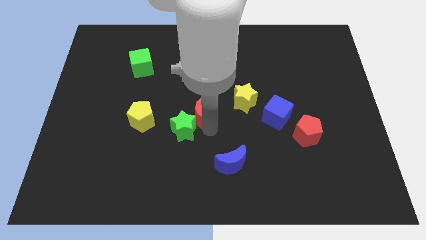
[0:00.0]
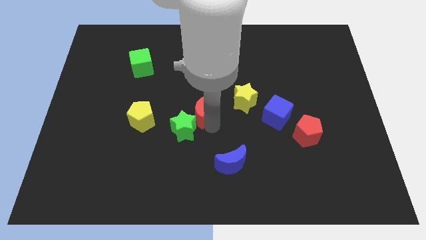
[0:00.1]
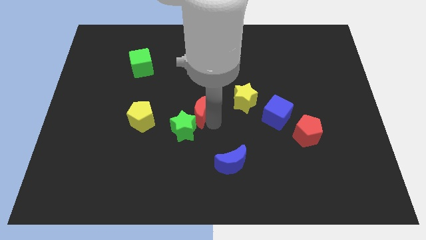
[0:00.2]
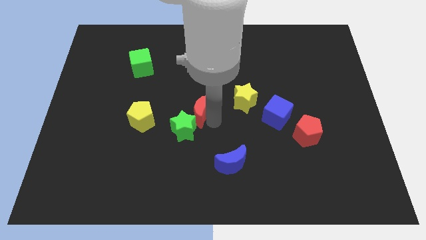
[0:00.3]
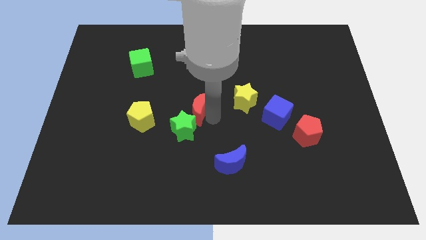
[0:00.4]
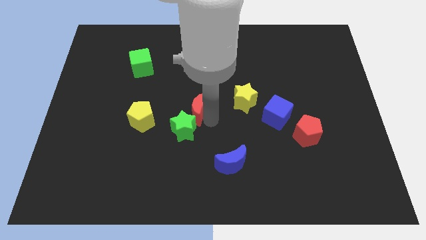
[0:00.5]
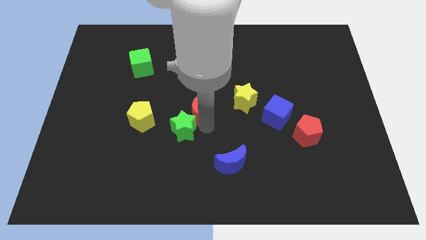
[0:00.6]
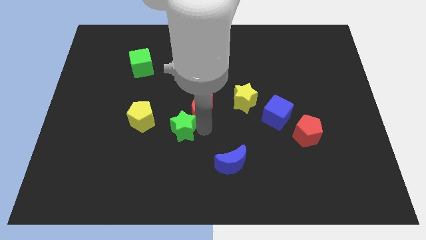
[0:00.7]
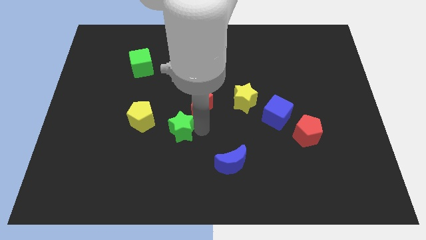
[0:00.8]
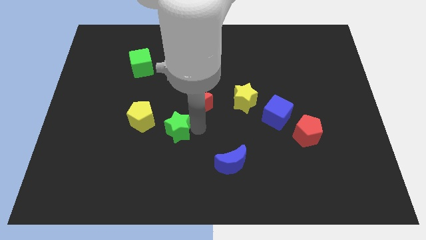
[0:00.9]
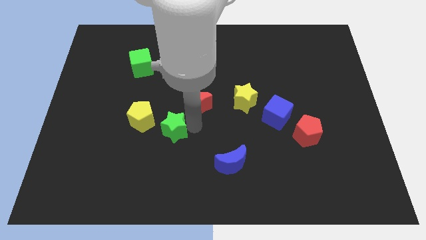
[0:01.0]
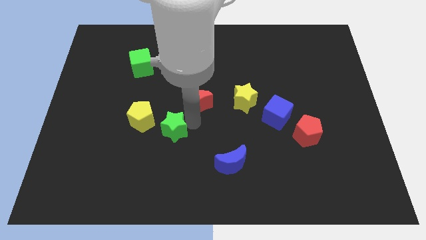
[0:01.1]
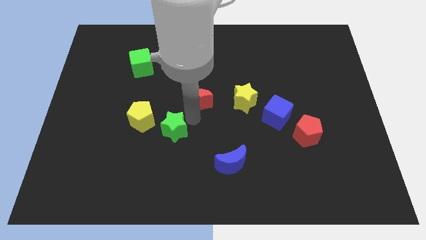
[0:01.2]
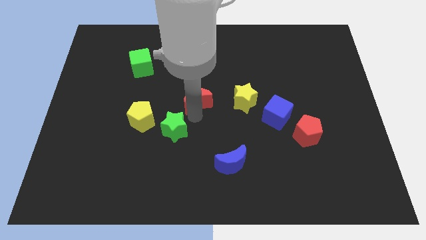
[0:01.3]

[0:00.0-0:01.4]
move the red crescent towards the top of the board

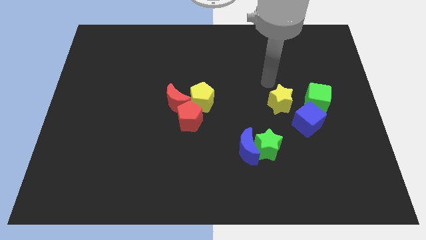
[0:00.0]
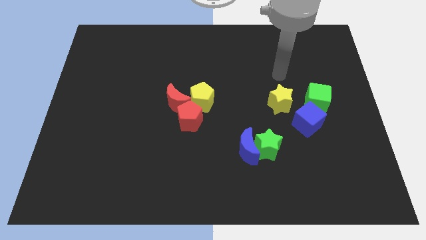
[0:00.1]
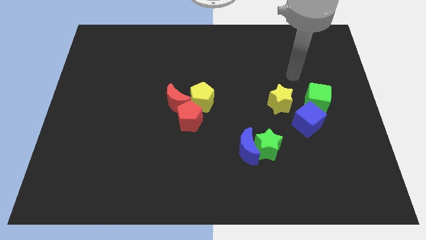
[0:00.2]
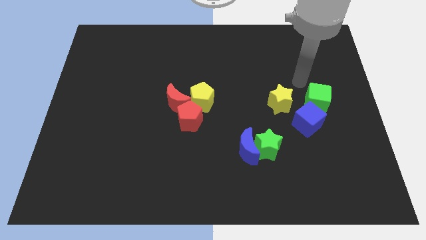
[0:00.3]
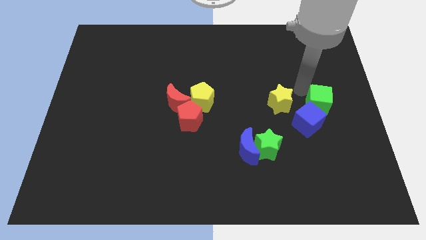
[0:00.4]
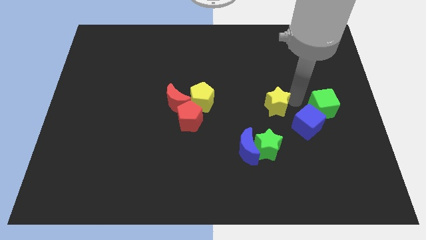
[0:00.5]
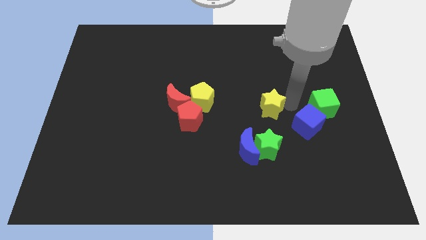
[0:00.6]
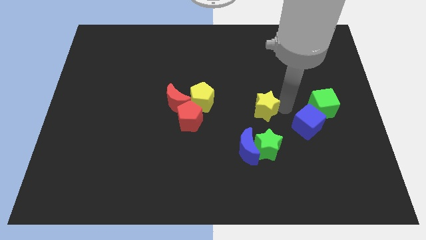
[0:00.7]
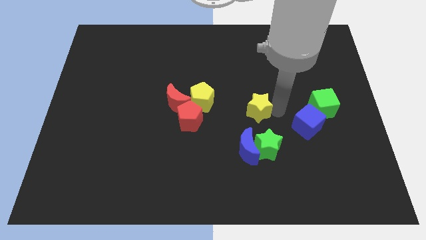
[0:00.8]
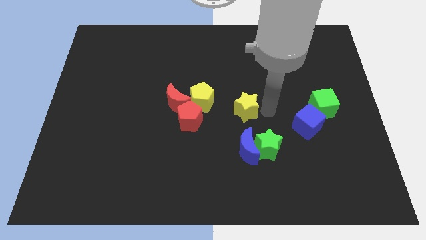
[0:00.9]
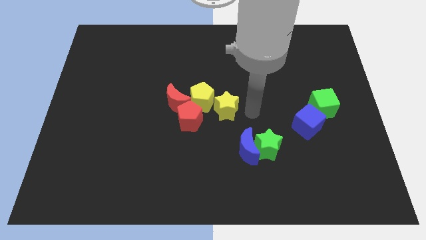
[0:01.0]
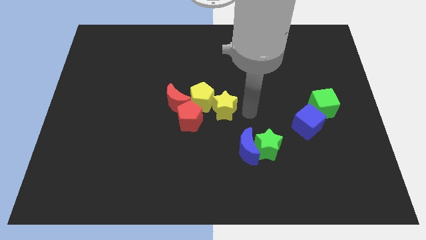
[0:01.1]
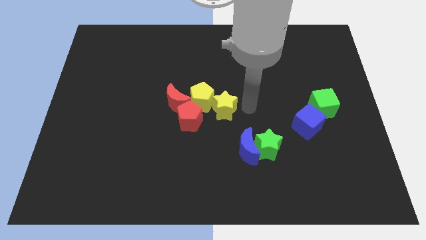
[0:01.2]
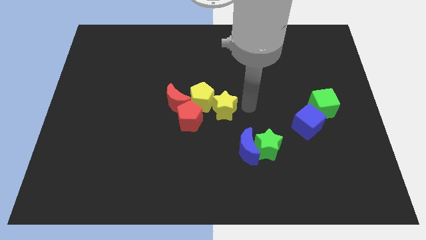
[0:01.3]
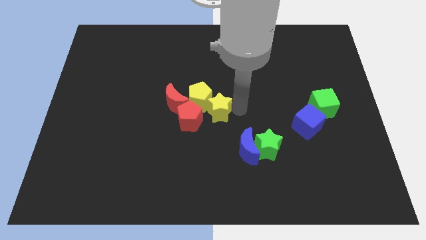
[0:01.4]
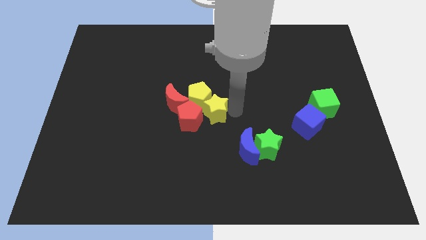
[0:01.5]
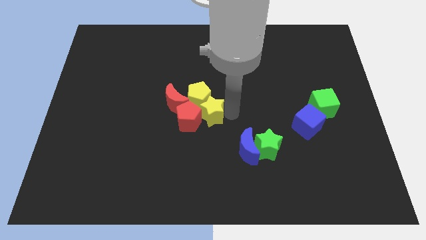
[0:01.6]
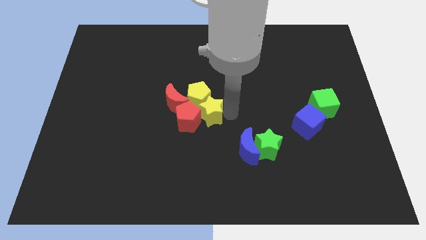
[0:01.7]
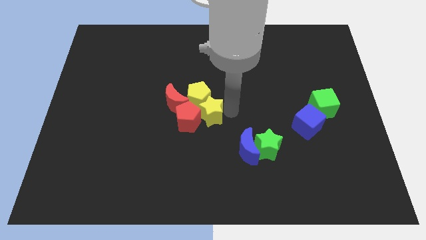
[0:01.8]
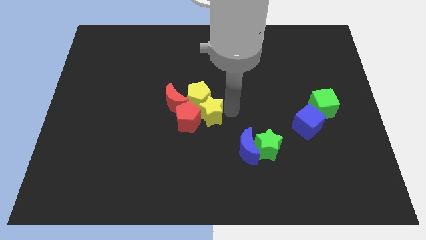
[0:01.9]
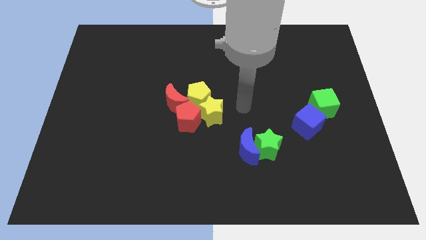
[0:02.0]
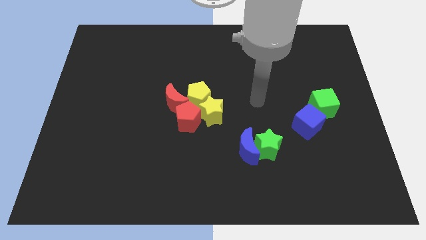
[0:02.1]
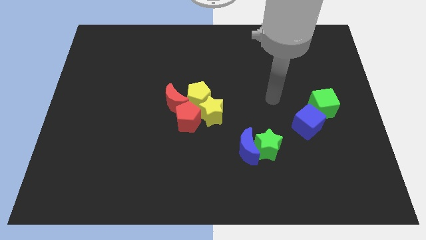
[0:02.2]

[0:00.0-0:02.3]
move the yellow star to the right of the red pentagon

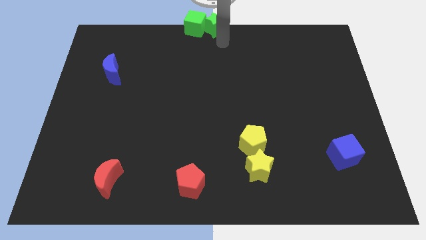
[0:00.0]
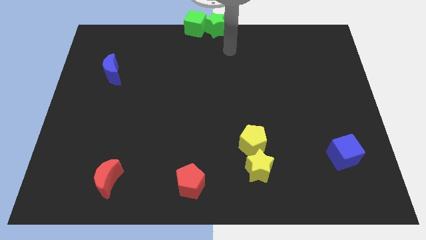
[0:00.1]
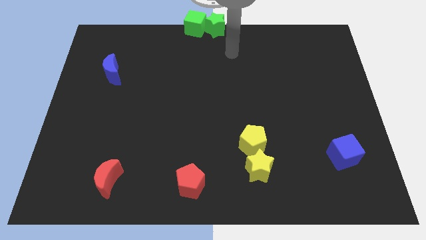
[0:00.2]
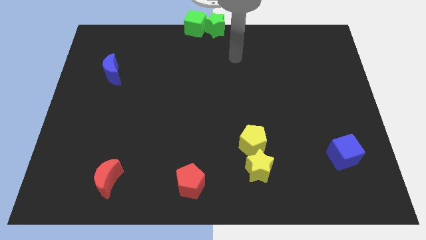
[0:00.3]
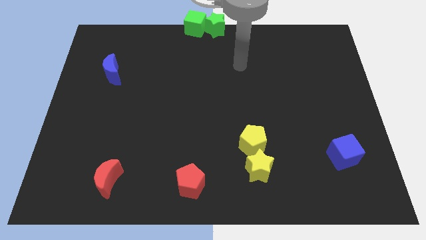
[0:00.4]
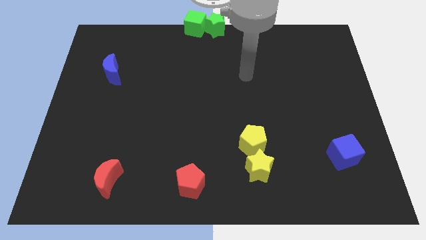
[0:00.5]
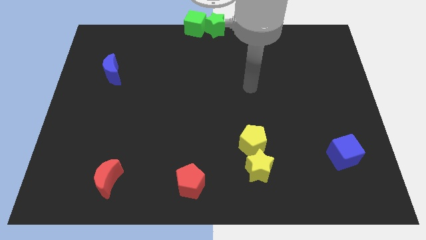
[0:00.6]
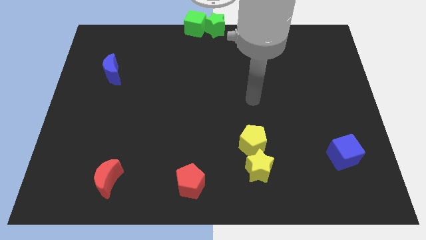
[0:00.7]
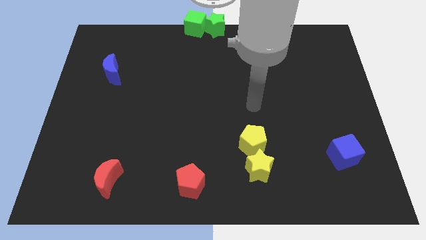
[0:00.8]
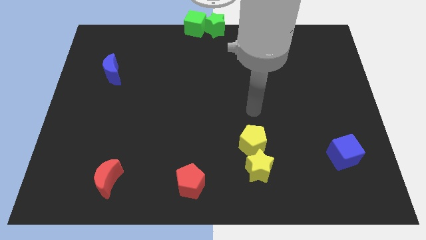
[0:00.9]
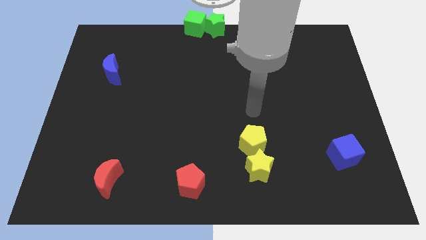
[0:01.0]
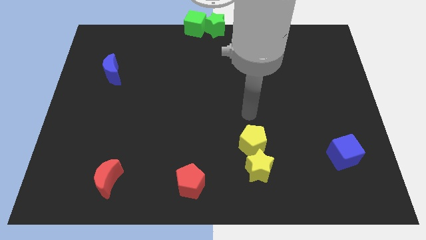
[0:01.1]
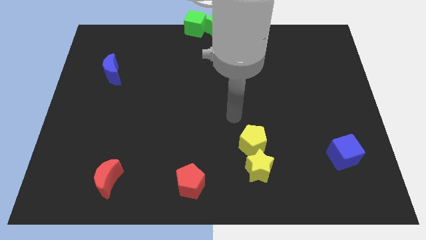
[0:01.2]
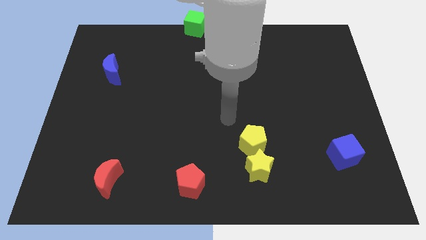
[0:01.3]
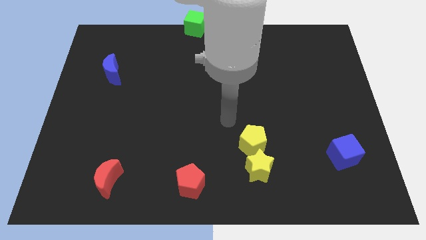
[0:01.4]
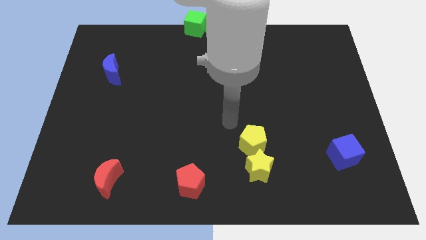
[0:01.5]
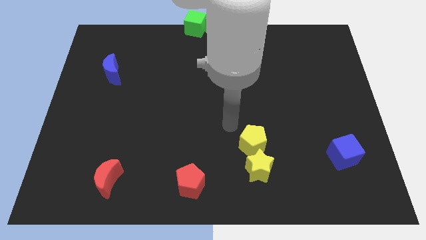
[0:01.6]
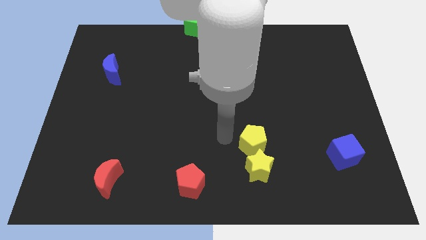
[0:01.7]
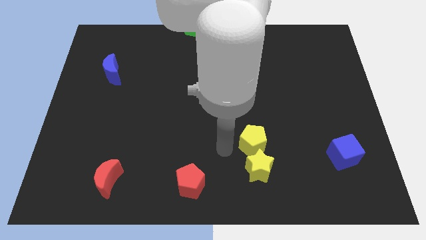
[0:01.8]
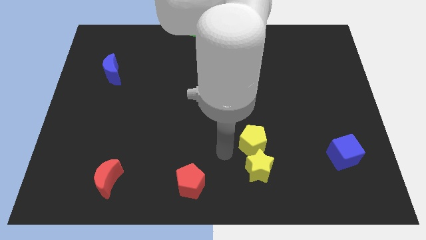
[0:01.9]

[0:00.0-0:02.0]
point your arm at the left side of the yellow pentagon

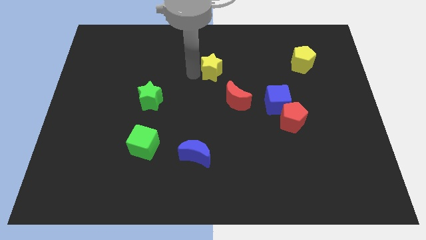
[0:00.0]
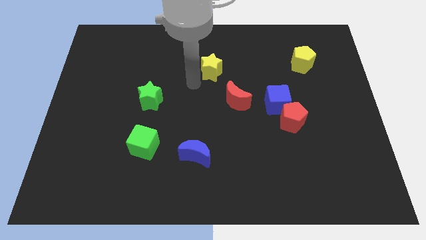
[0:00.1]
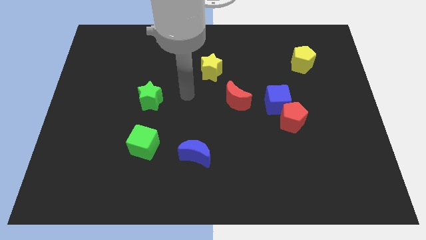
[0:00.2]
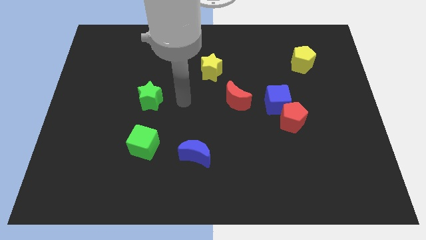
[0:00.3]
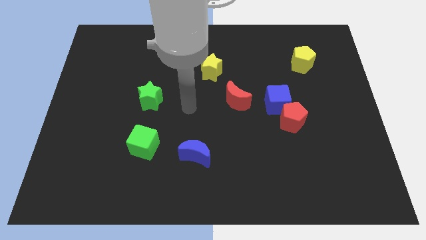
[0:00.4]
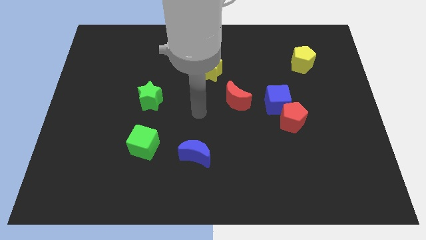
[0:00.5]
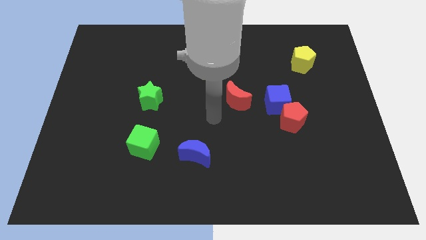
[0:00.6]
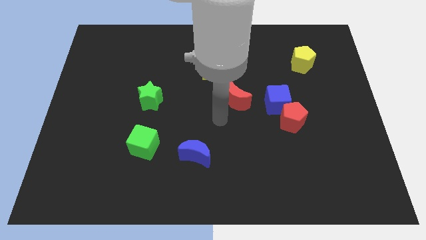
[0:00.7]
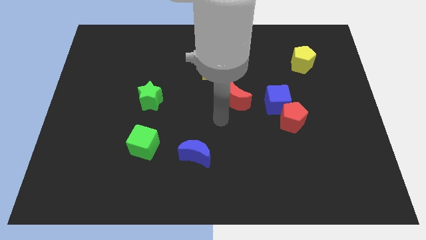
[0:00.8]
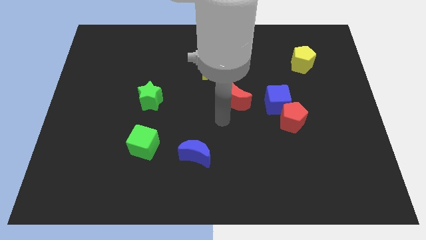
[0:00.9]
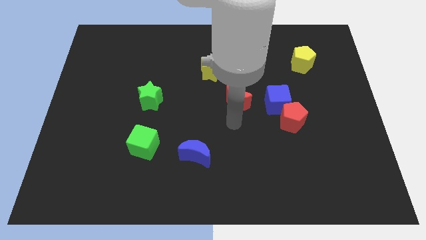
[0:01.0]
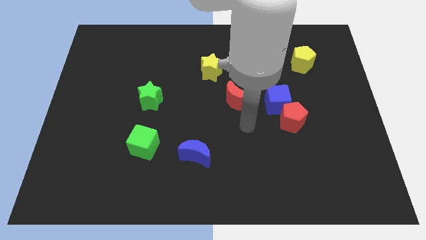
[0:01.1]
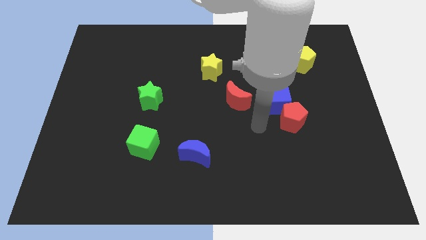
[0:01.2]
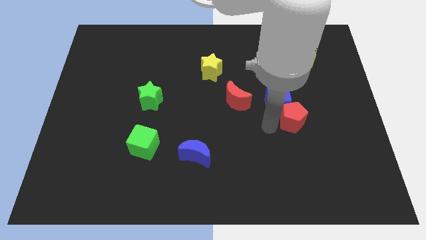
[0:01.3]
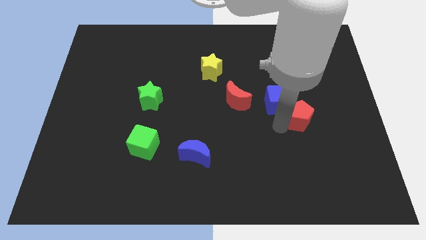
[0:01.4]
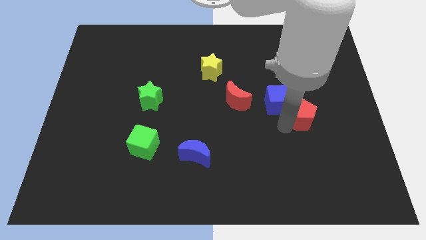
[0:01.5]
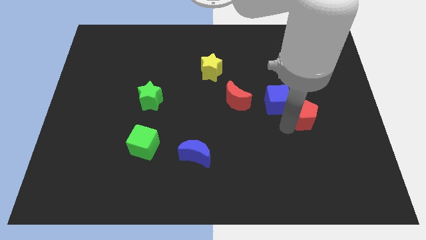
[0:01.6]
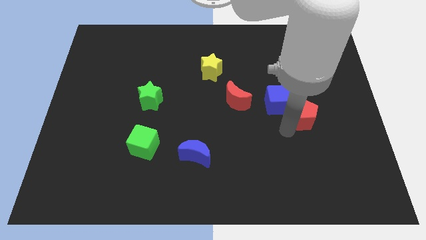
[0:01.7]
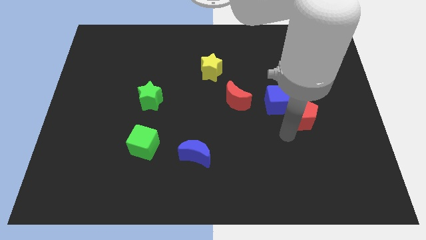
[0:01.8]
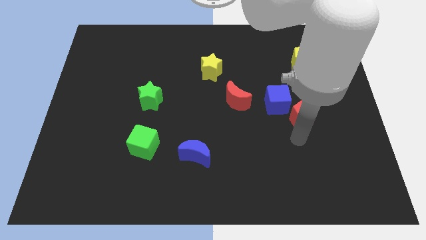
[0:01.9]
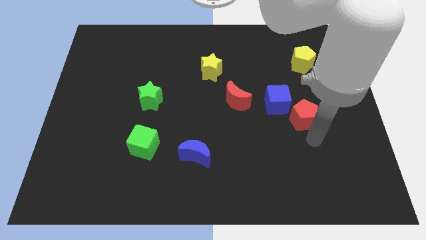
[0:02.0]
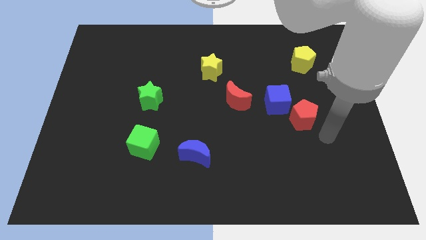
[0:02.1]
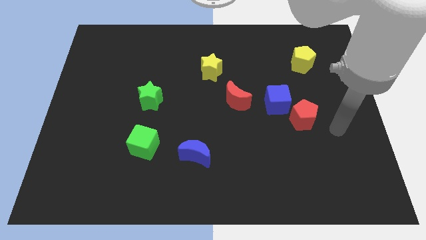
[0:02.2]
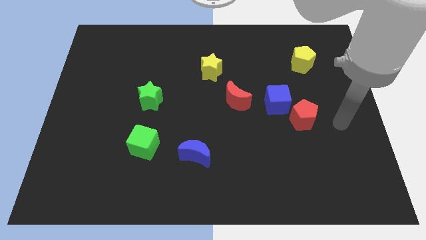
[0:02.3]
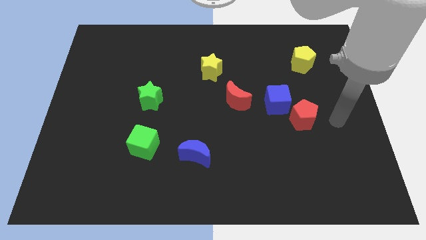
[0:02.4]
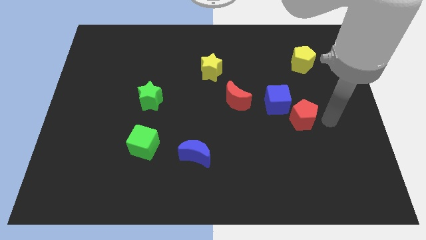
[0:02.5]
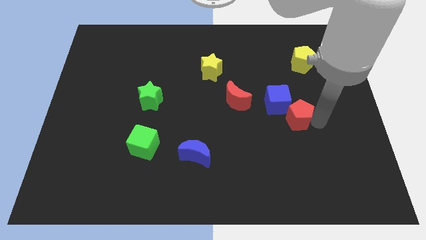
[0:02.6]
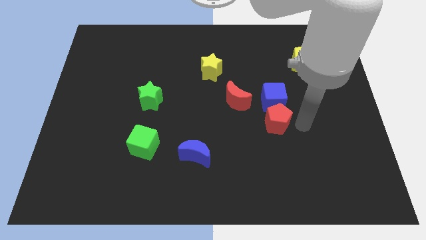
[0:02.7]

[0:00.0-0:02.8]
move the red pentagon below the blue cube

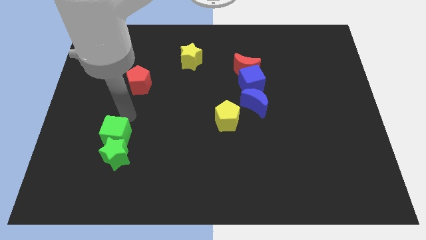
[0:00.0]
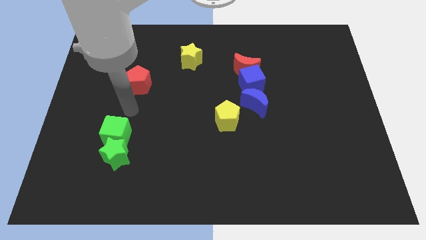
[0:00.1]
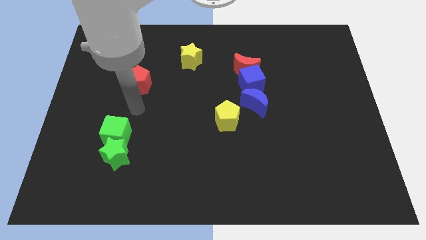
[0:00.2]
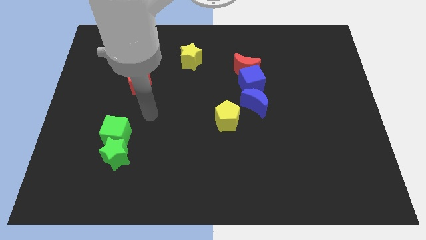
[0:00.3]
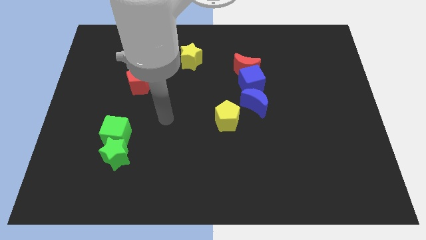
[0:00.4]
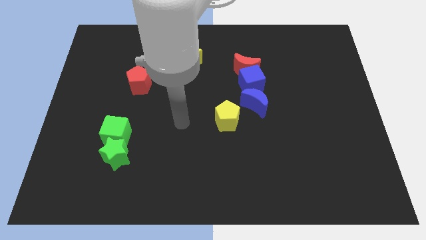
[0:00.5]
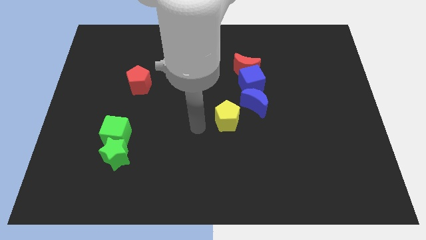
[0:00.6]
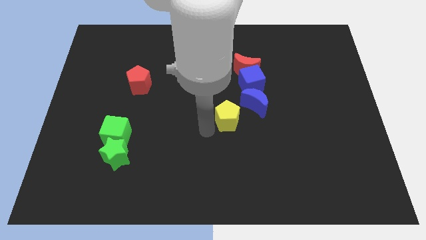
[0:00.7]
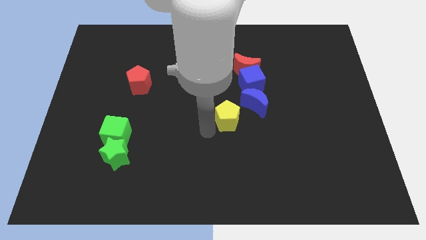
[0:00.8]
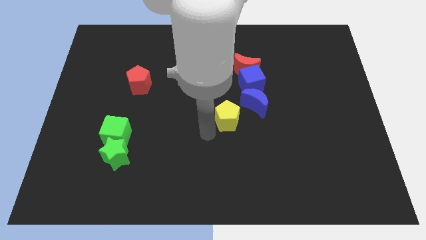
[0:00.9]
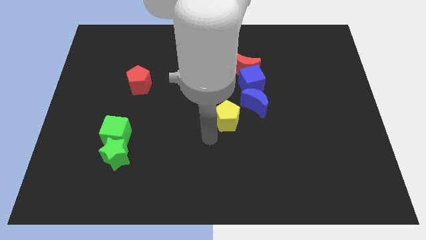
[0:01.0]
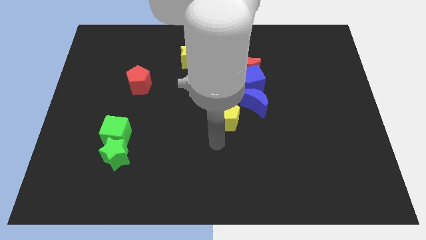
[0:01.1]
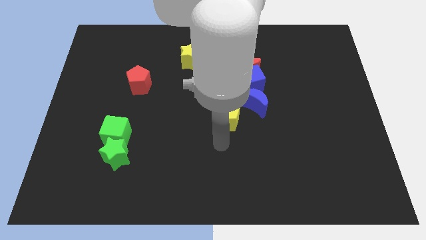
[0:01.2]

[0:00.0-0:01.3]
point your arm below the yellow pentagon
